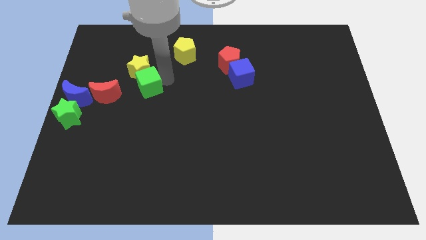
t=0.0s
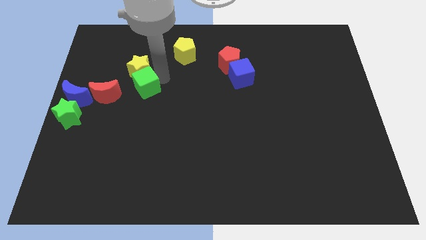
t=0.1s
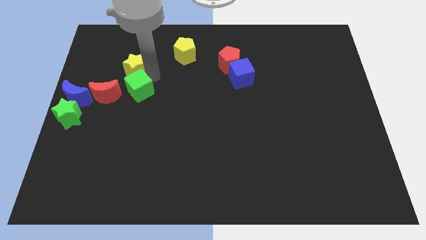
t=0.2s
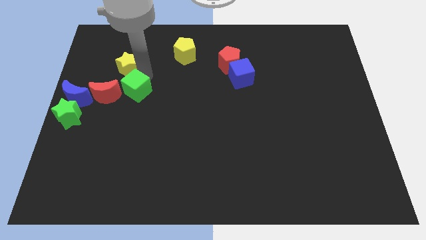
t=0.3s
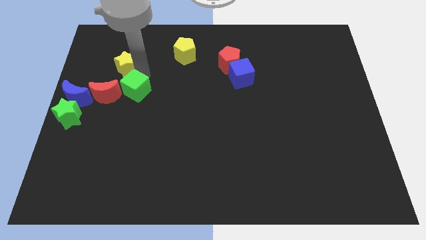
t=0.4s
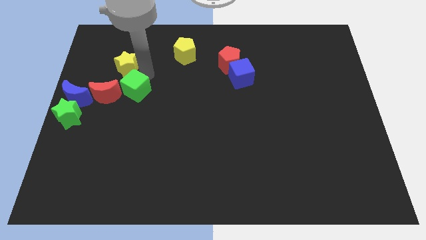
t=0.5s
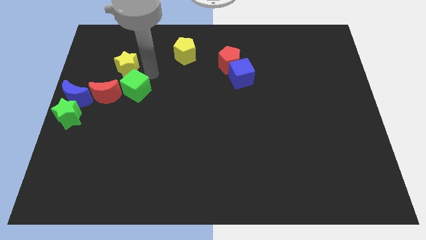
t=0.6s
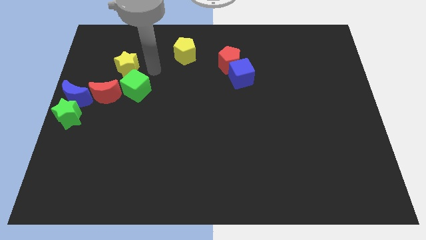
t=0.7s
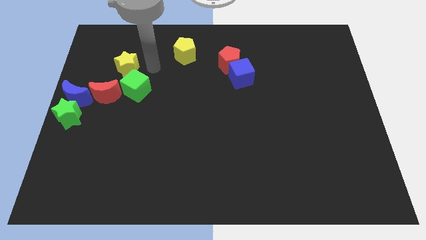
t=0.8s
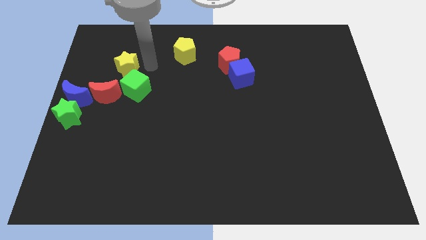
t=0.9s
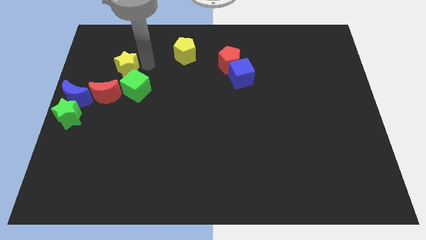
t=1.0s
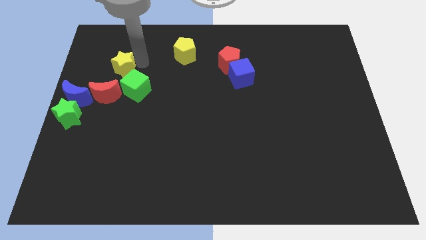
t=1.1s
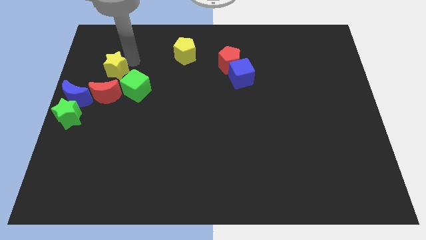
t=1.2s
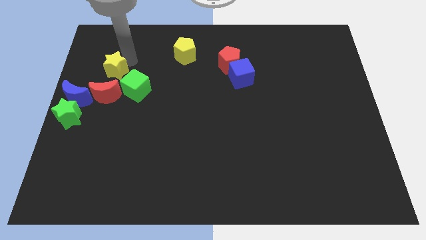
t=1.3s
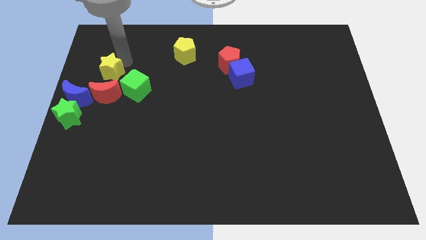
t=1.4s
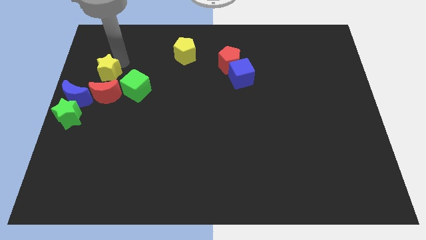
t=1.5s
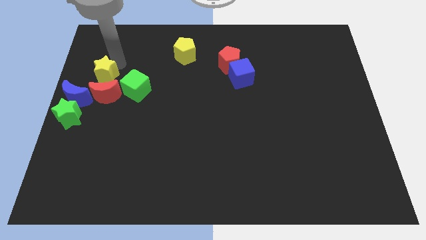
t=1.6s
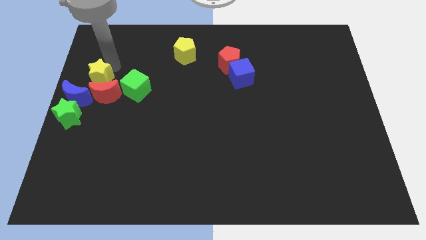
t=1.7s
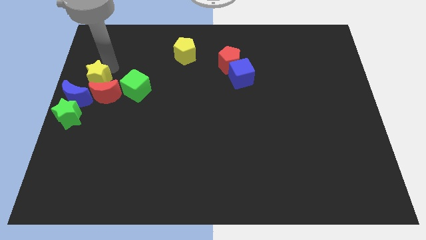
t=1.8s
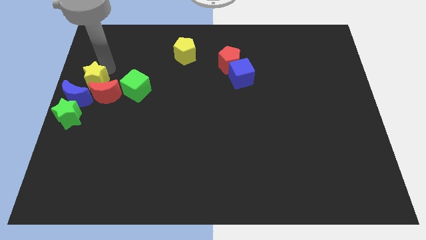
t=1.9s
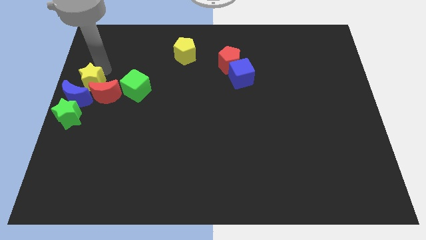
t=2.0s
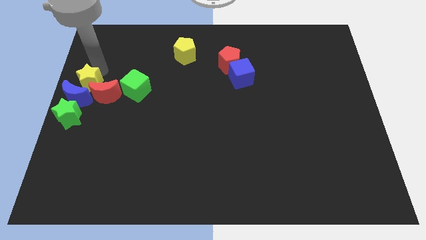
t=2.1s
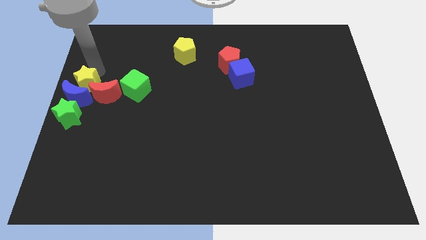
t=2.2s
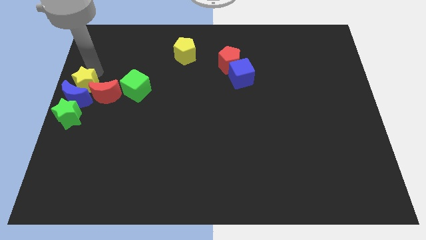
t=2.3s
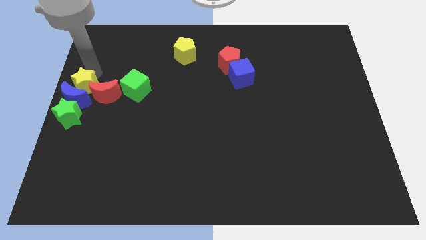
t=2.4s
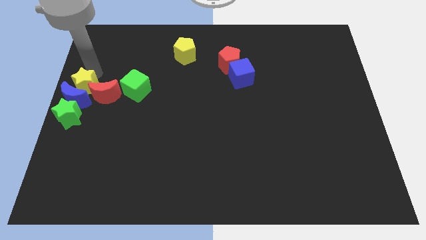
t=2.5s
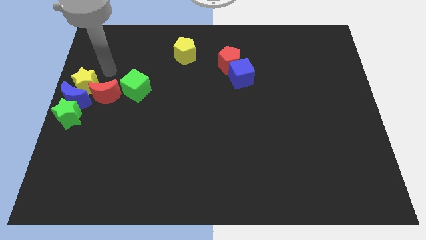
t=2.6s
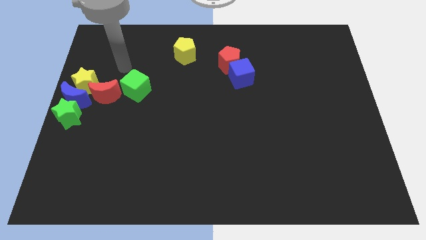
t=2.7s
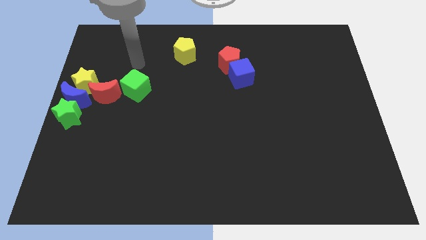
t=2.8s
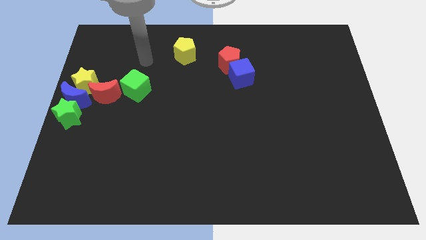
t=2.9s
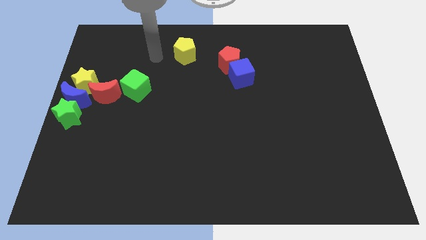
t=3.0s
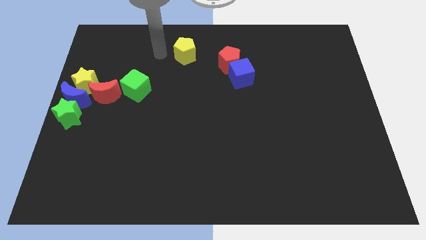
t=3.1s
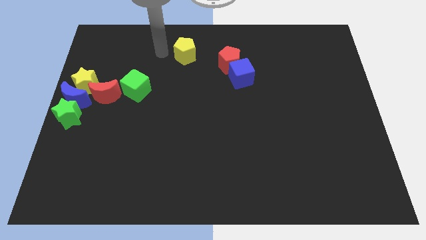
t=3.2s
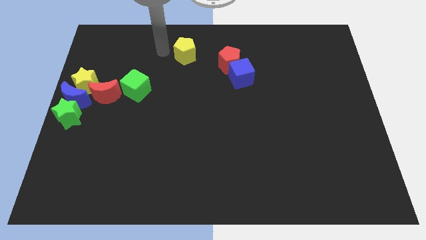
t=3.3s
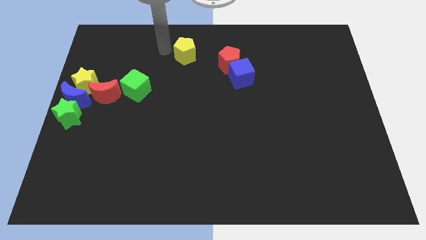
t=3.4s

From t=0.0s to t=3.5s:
place the yellow star above the blue crescent

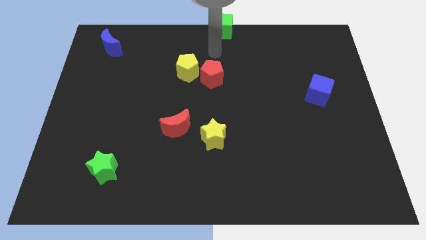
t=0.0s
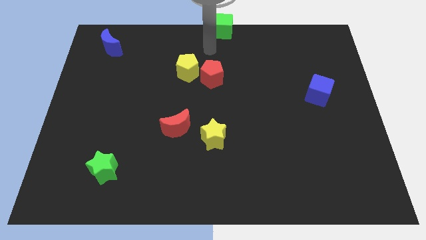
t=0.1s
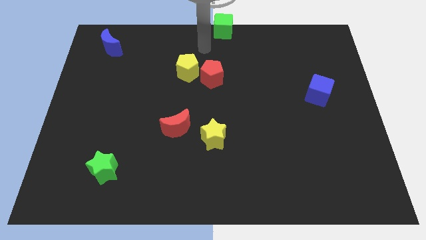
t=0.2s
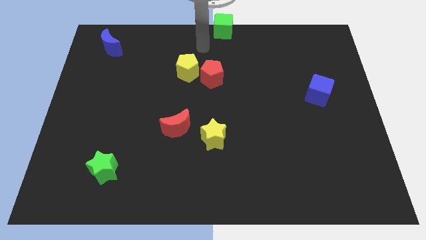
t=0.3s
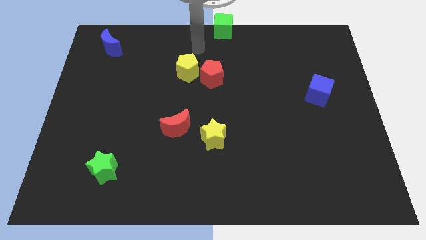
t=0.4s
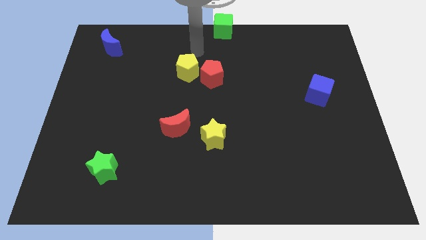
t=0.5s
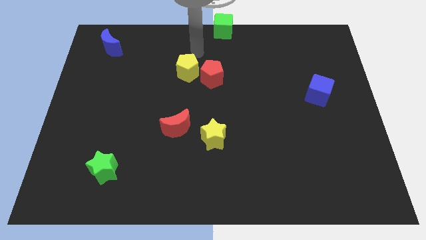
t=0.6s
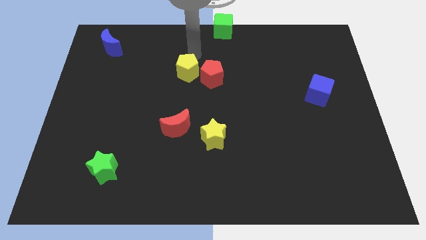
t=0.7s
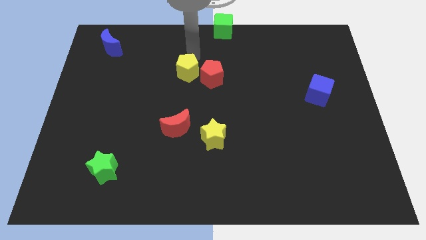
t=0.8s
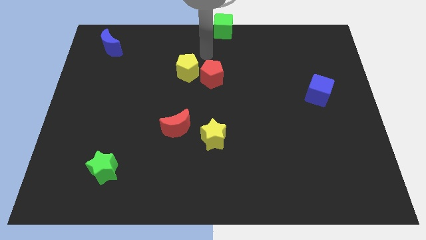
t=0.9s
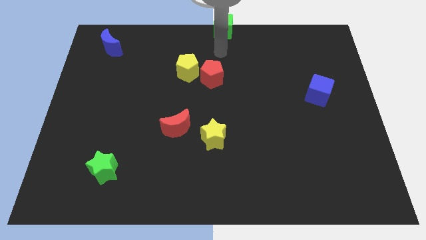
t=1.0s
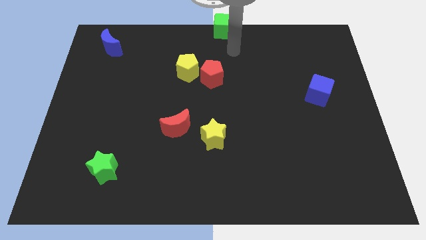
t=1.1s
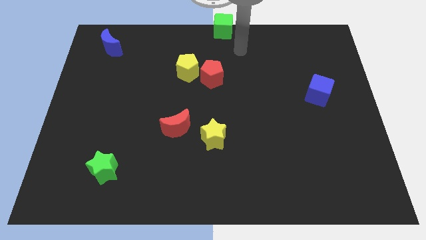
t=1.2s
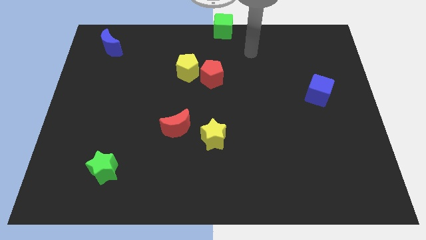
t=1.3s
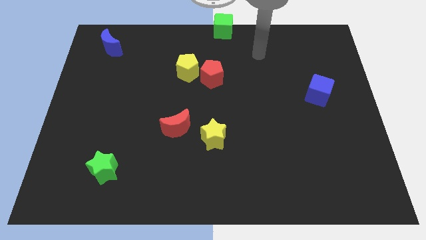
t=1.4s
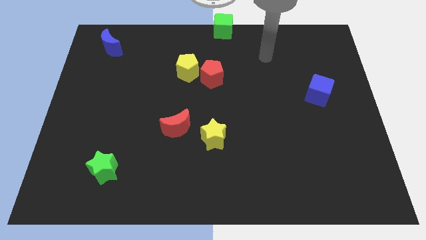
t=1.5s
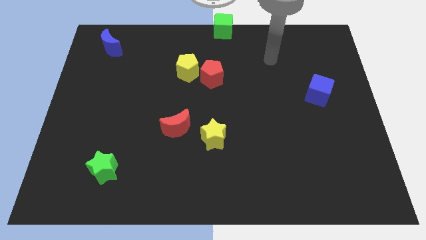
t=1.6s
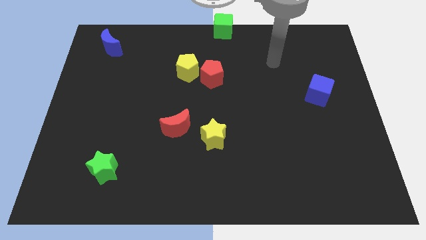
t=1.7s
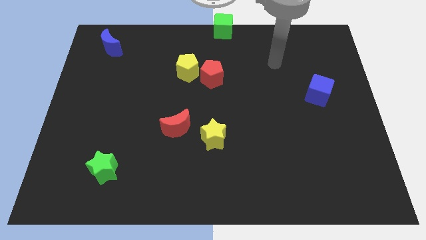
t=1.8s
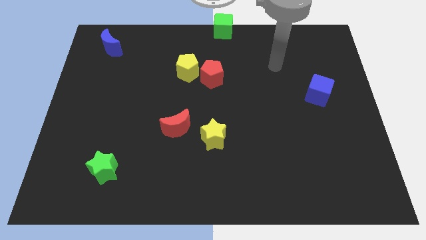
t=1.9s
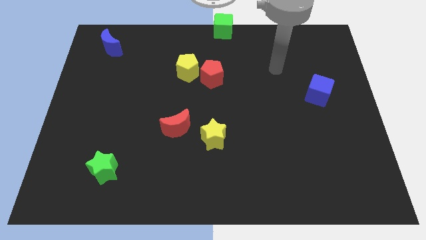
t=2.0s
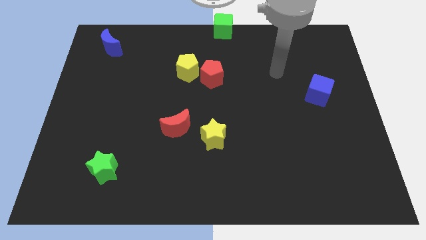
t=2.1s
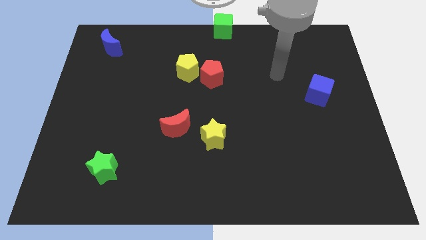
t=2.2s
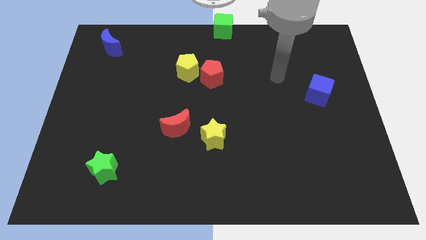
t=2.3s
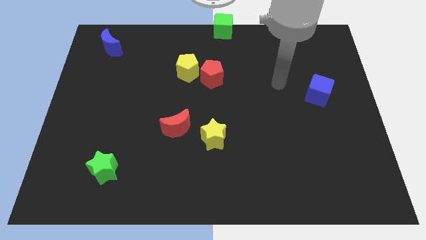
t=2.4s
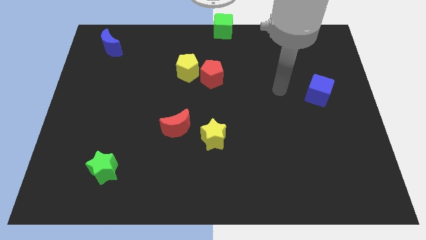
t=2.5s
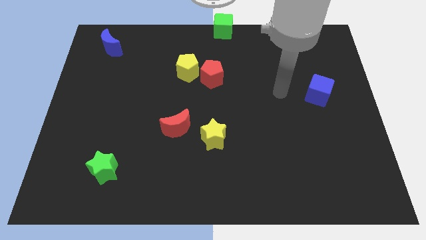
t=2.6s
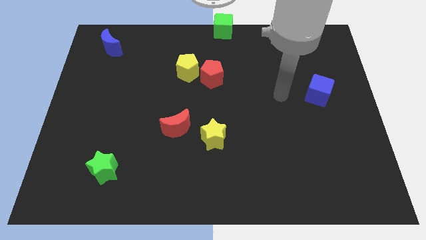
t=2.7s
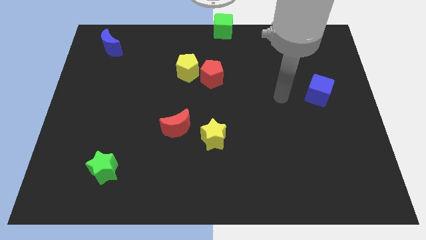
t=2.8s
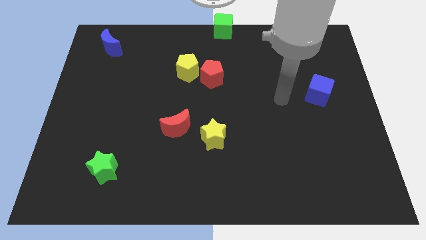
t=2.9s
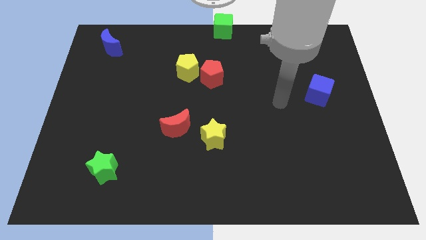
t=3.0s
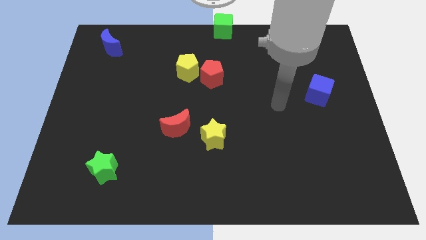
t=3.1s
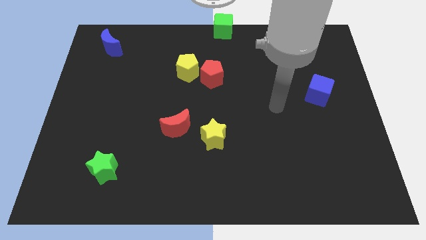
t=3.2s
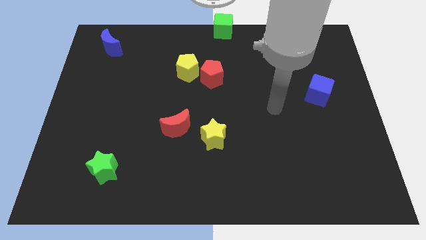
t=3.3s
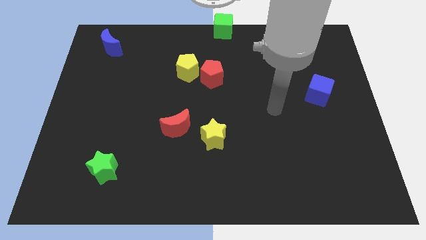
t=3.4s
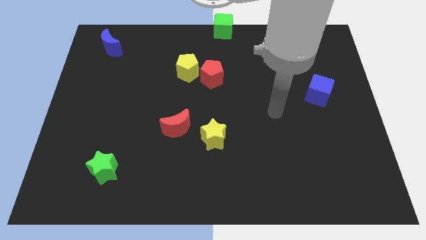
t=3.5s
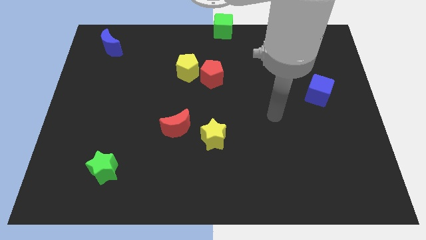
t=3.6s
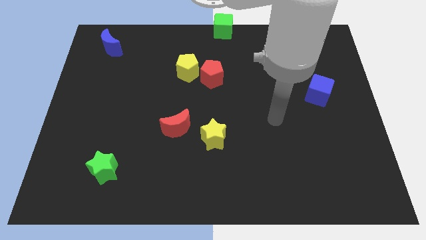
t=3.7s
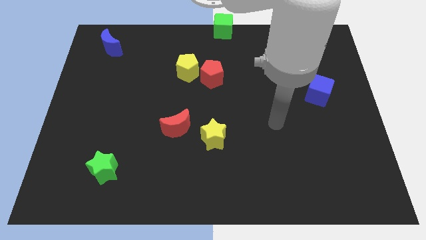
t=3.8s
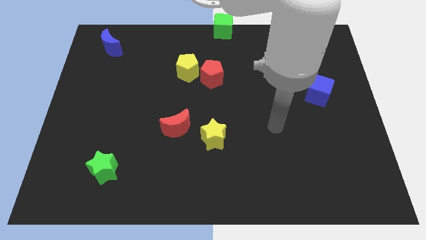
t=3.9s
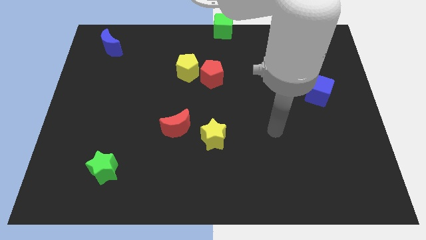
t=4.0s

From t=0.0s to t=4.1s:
move the arm away from the red pentagon

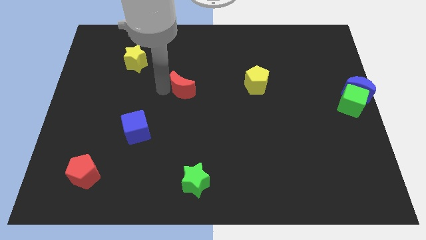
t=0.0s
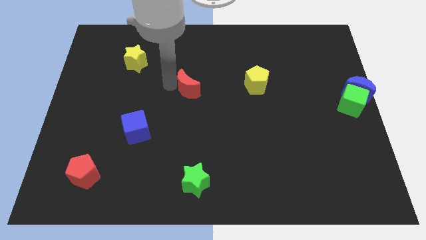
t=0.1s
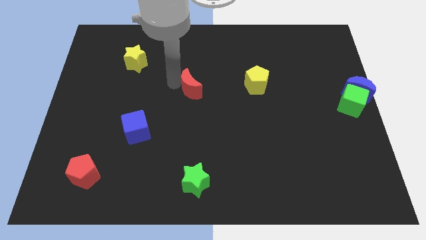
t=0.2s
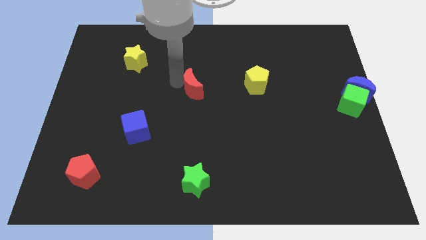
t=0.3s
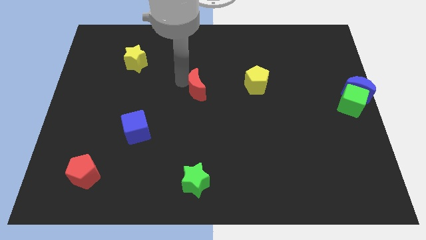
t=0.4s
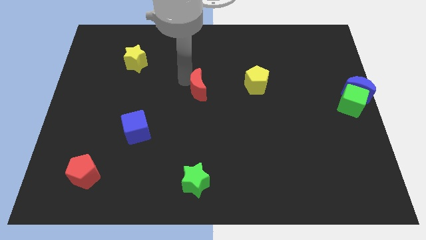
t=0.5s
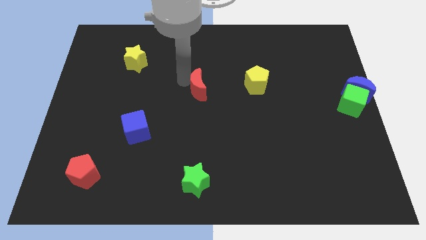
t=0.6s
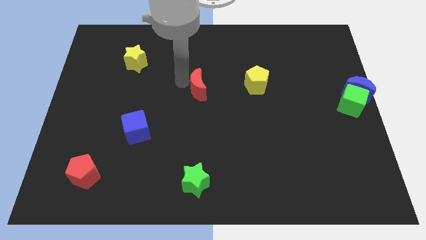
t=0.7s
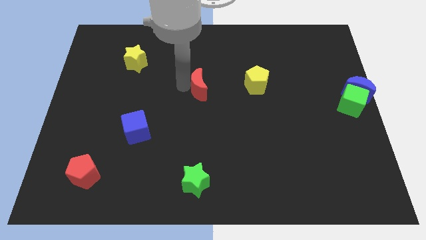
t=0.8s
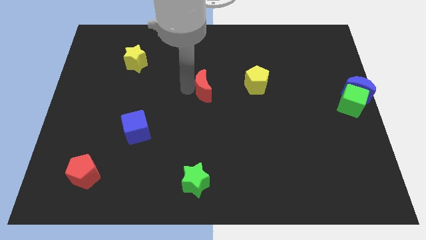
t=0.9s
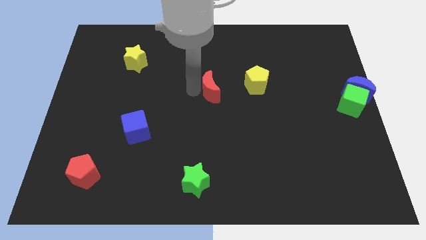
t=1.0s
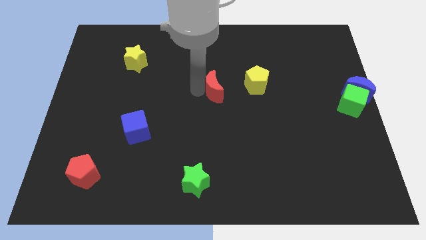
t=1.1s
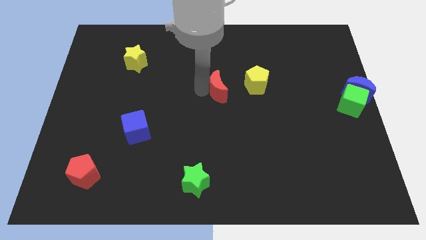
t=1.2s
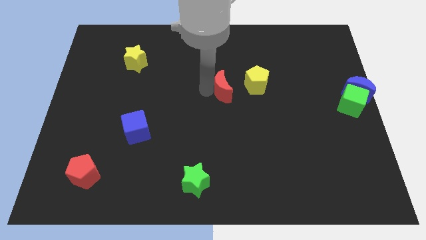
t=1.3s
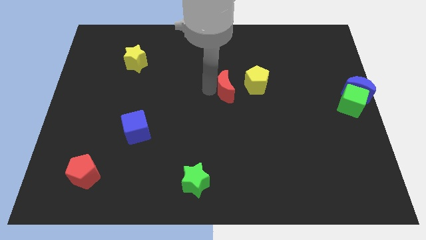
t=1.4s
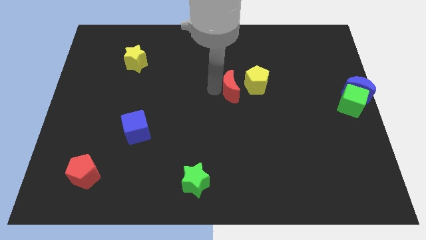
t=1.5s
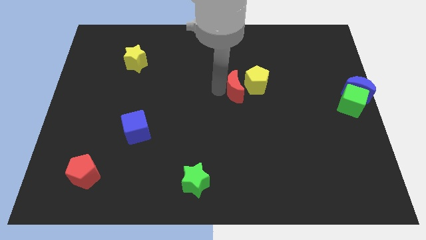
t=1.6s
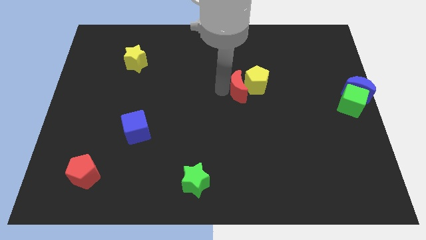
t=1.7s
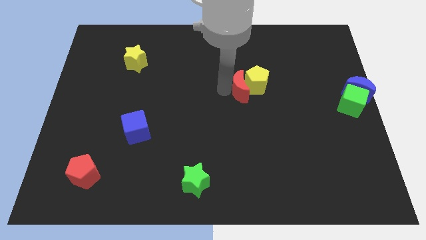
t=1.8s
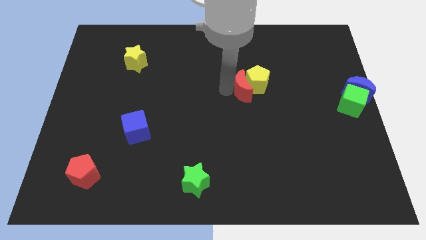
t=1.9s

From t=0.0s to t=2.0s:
move the red crescent close to yellow pentagon
